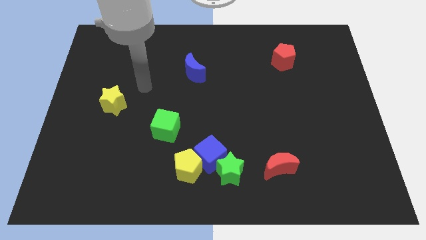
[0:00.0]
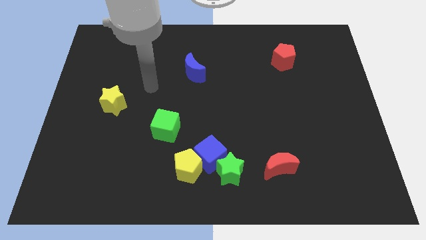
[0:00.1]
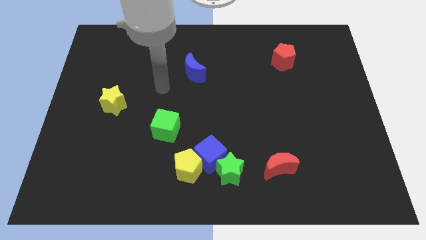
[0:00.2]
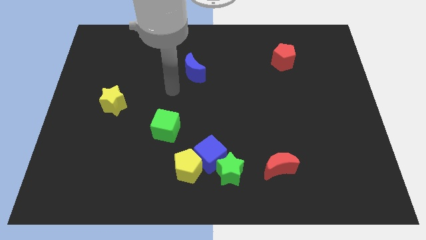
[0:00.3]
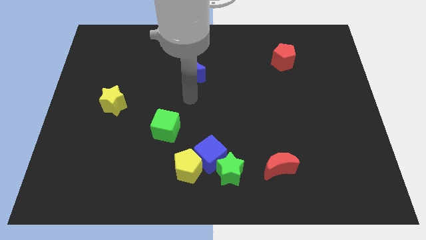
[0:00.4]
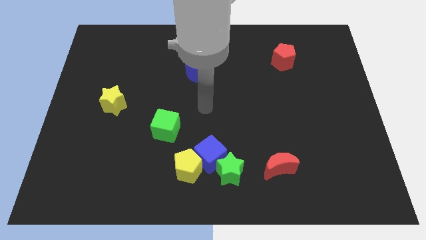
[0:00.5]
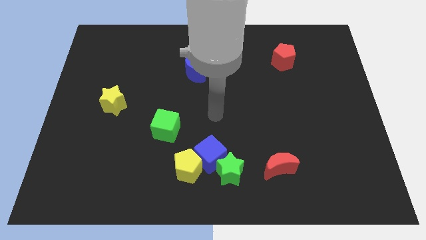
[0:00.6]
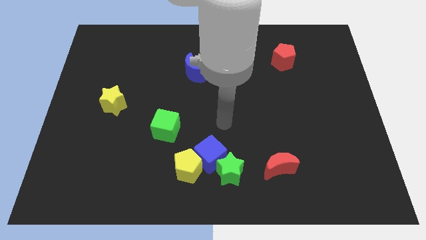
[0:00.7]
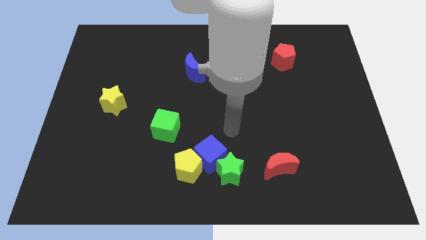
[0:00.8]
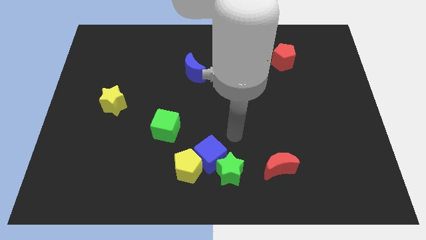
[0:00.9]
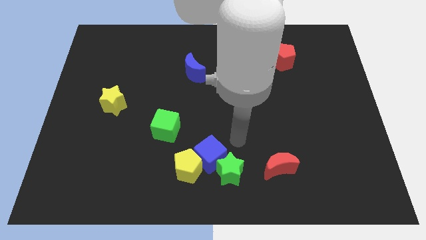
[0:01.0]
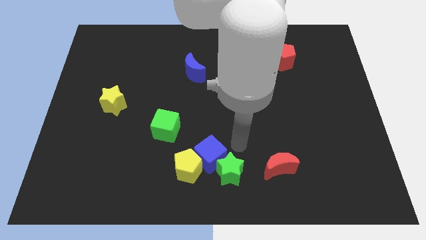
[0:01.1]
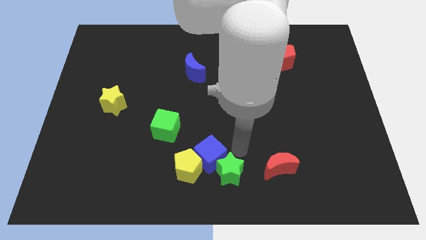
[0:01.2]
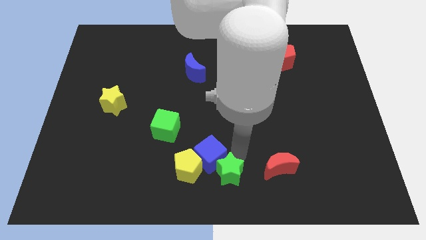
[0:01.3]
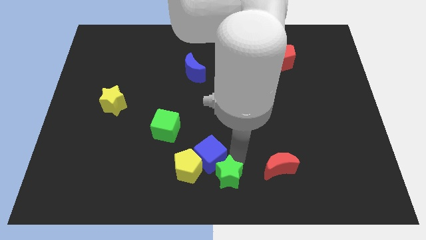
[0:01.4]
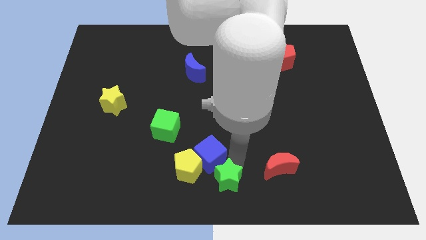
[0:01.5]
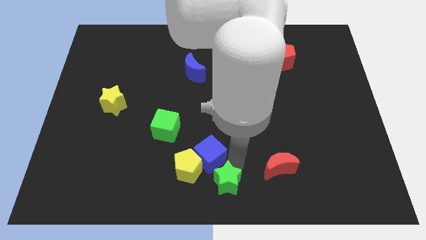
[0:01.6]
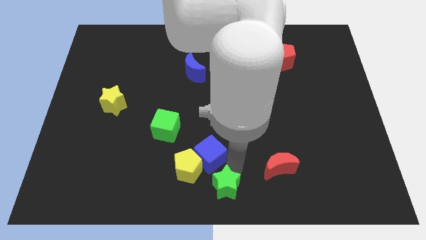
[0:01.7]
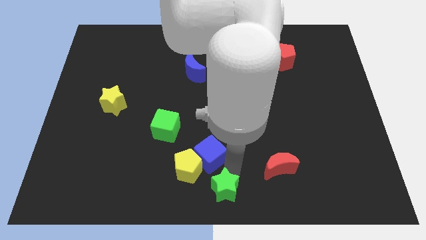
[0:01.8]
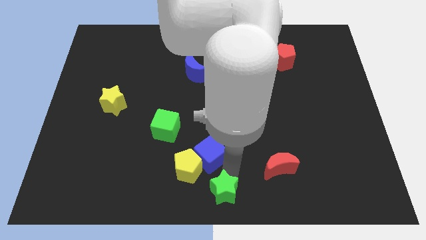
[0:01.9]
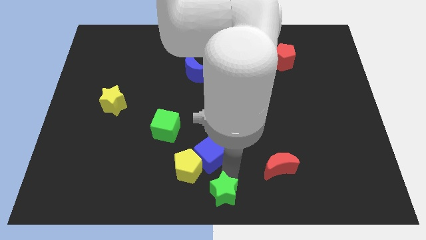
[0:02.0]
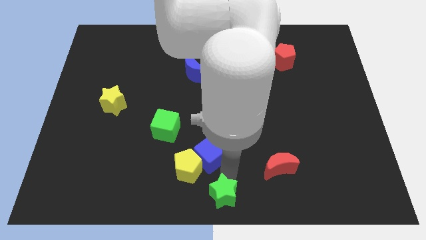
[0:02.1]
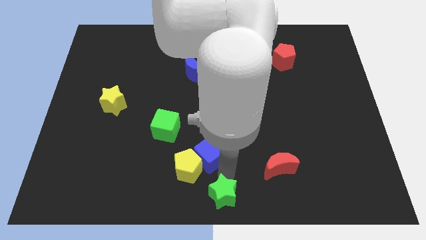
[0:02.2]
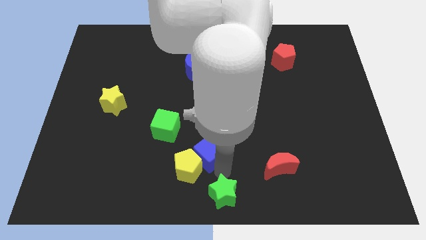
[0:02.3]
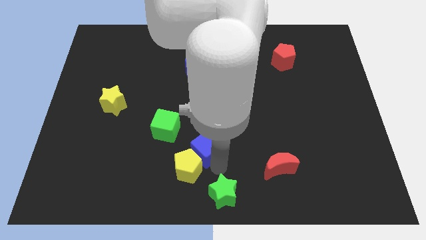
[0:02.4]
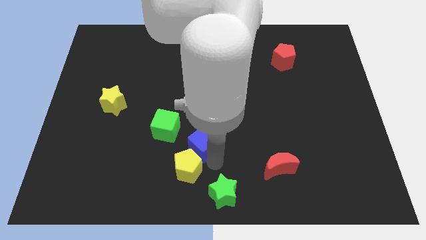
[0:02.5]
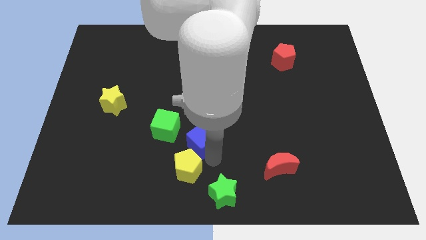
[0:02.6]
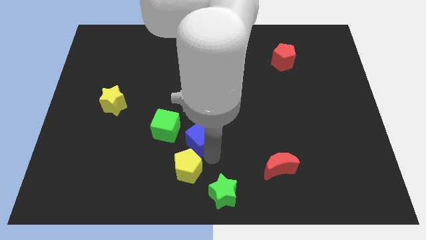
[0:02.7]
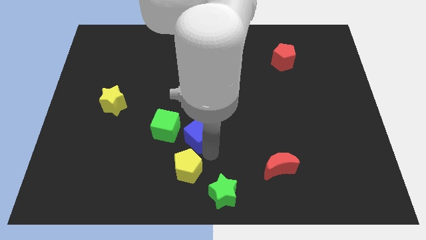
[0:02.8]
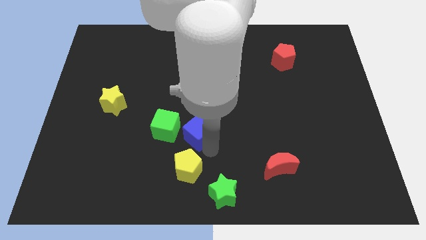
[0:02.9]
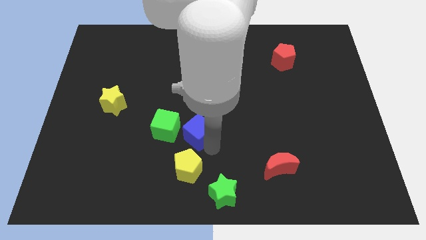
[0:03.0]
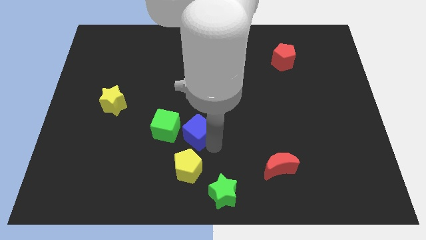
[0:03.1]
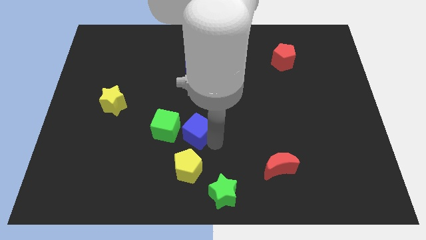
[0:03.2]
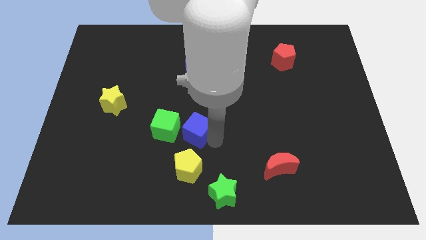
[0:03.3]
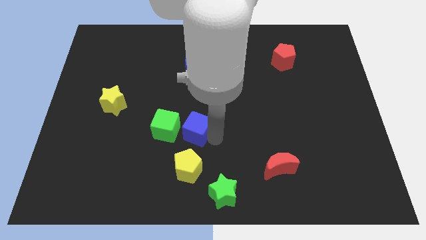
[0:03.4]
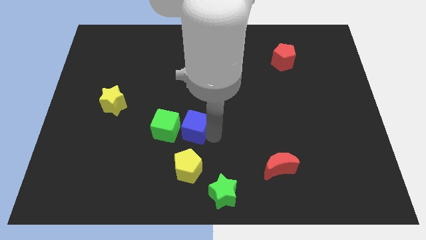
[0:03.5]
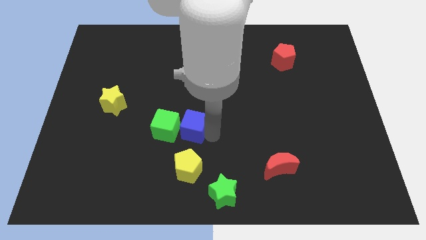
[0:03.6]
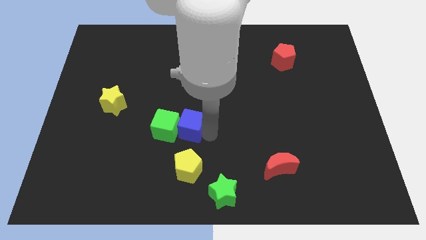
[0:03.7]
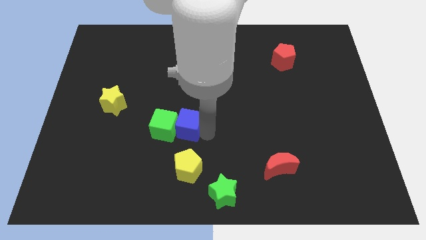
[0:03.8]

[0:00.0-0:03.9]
slide the blue cube to the green cube

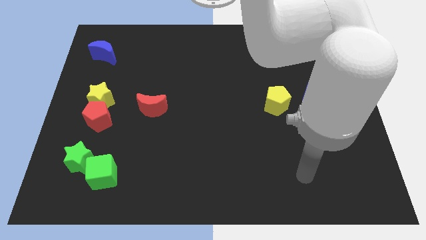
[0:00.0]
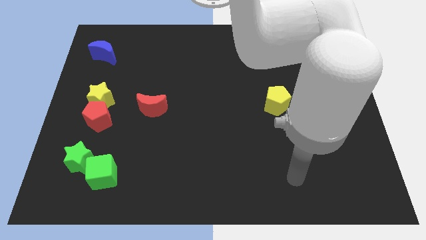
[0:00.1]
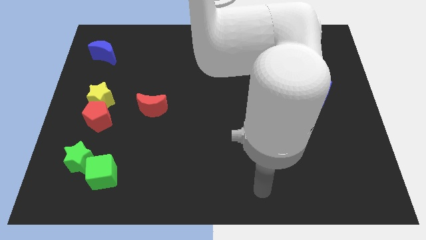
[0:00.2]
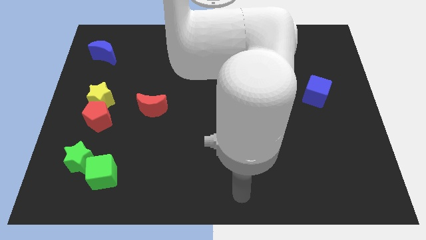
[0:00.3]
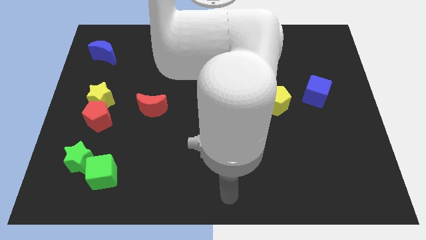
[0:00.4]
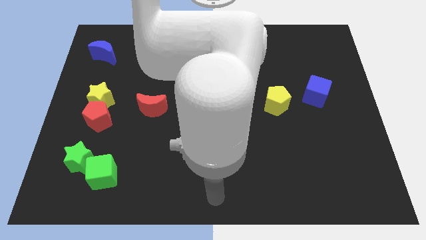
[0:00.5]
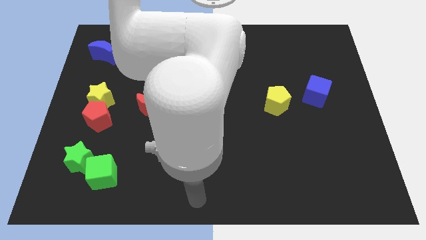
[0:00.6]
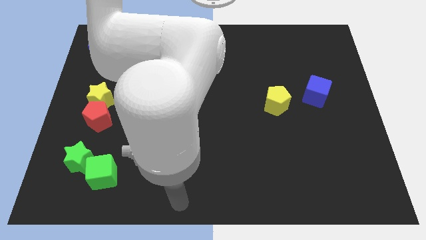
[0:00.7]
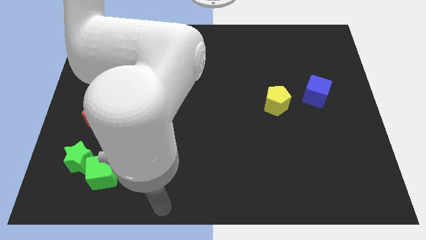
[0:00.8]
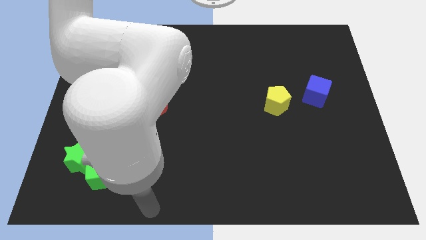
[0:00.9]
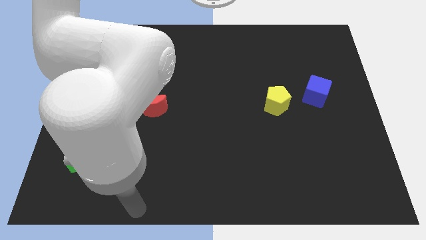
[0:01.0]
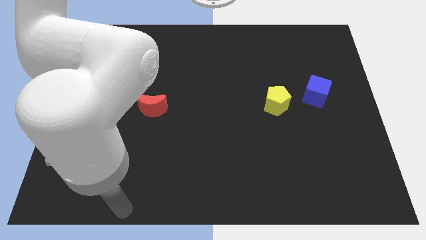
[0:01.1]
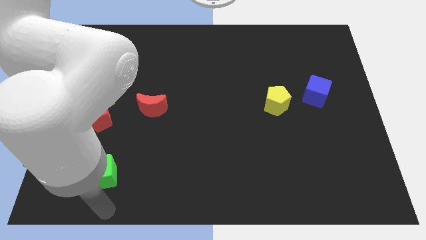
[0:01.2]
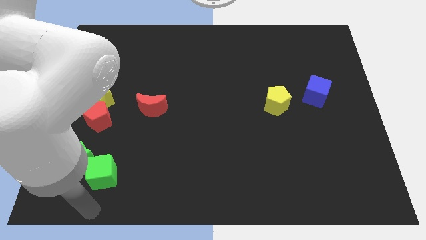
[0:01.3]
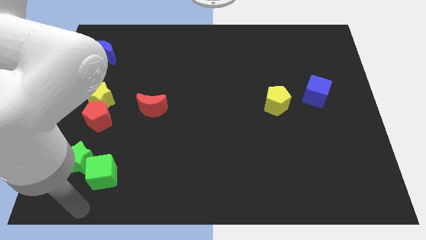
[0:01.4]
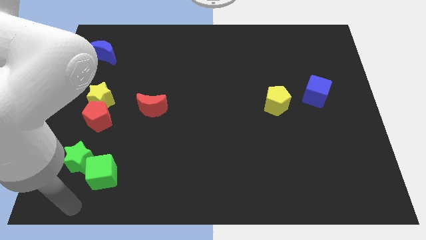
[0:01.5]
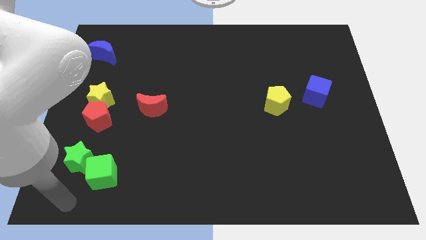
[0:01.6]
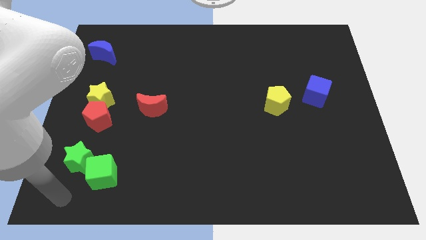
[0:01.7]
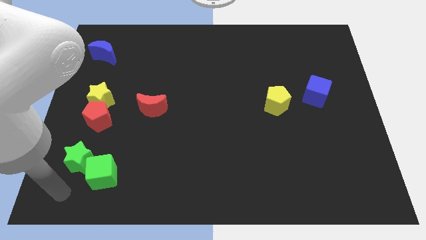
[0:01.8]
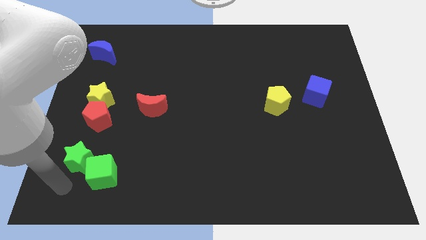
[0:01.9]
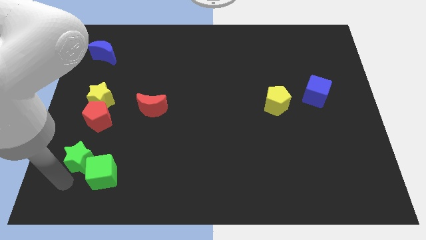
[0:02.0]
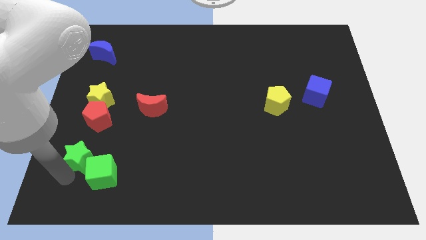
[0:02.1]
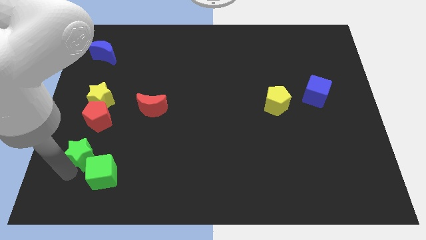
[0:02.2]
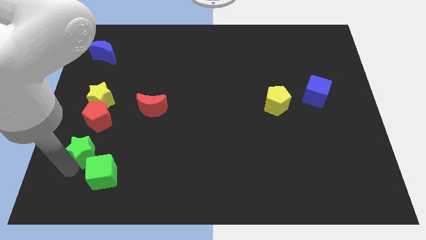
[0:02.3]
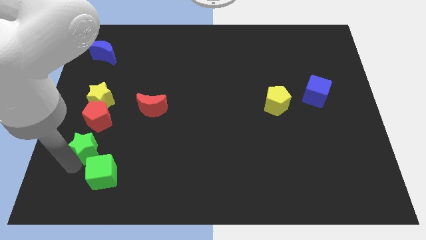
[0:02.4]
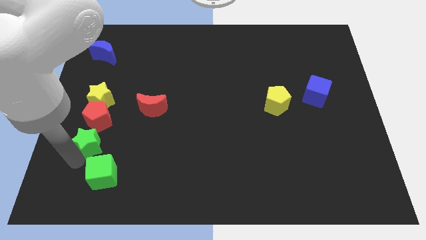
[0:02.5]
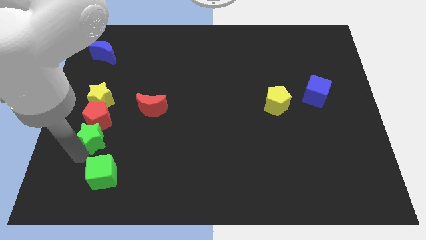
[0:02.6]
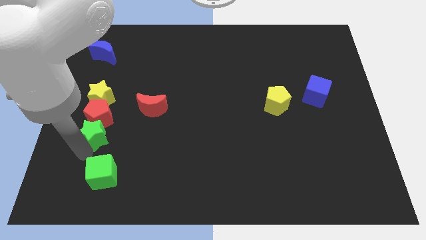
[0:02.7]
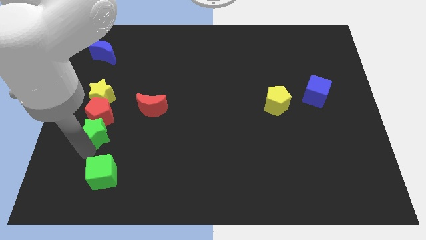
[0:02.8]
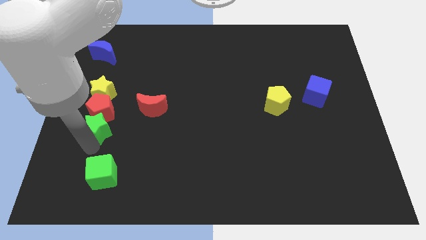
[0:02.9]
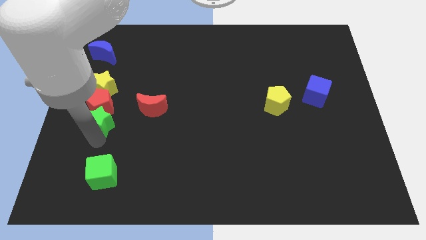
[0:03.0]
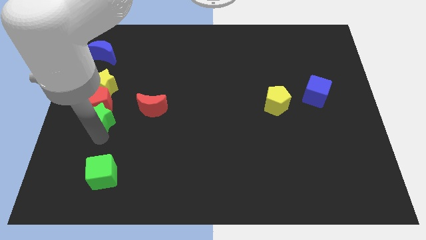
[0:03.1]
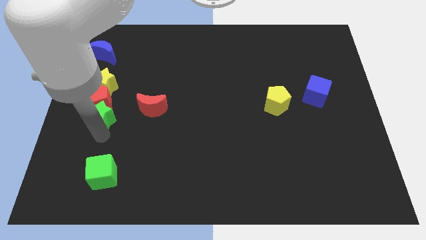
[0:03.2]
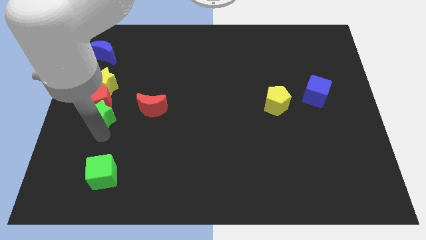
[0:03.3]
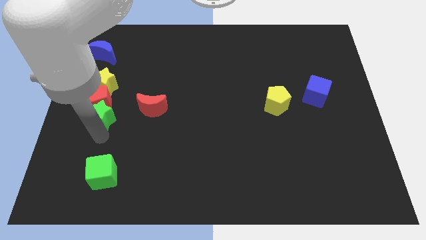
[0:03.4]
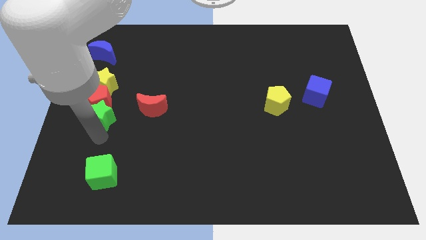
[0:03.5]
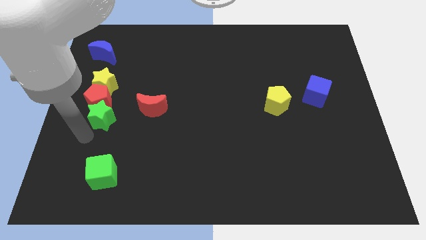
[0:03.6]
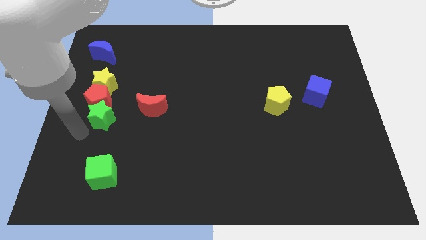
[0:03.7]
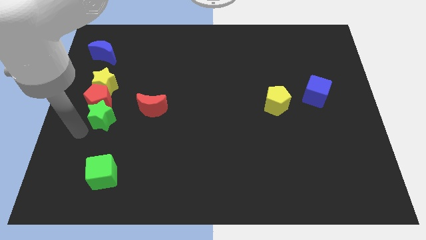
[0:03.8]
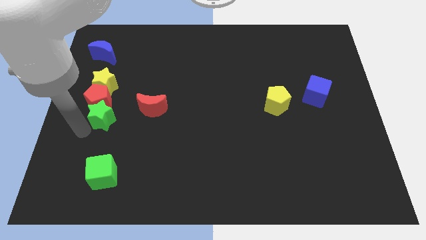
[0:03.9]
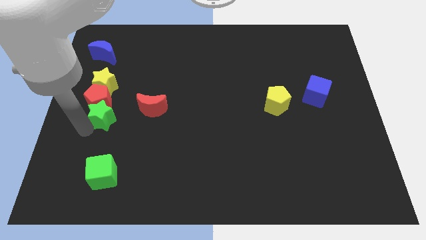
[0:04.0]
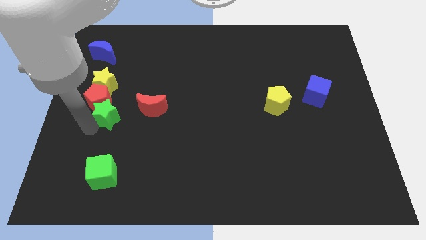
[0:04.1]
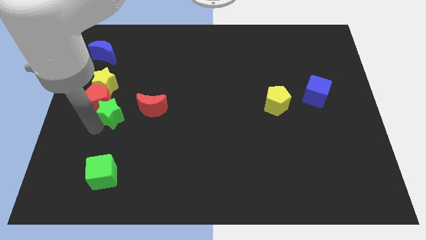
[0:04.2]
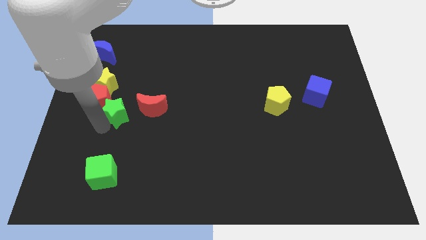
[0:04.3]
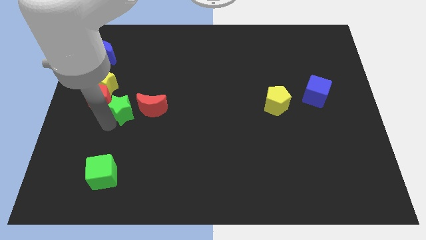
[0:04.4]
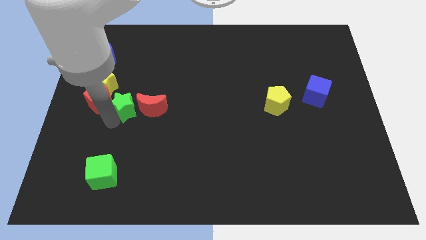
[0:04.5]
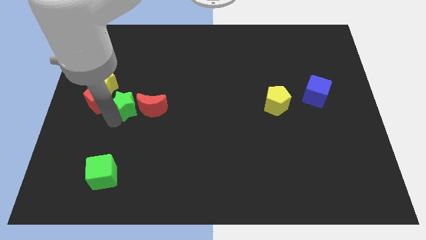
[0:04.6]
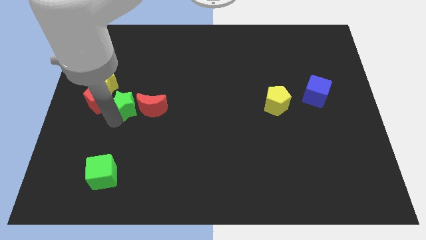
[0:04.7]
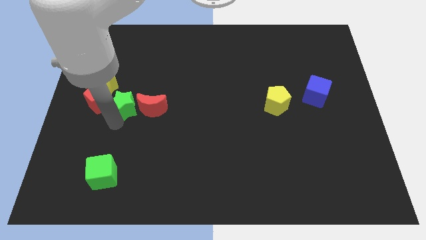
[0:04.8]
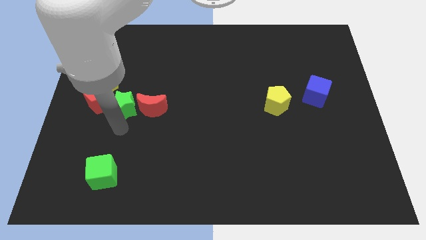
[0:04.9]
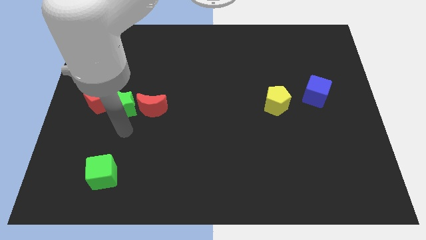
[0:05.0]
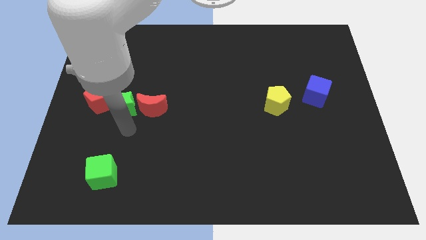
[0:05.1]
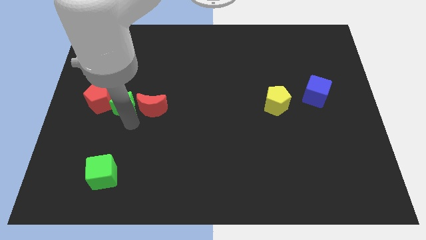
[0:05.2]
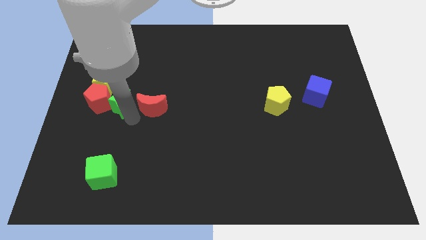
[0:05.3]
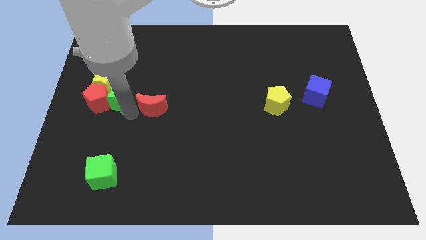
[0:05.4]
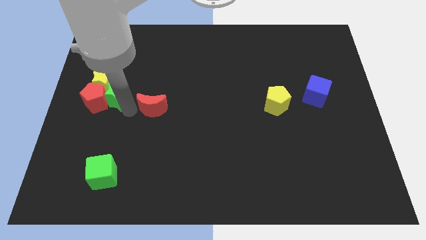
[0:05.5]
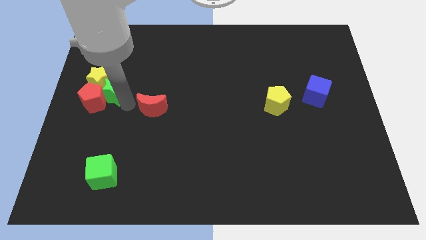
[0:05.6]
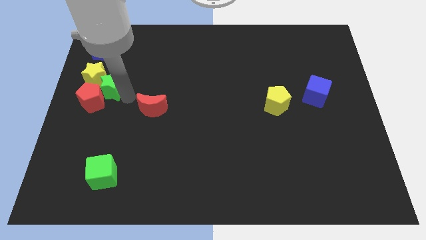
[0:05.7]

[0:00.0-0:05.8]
slide the green star towards the yellow star
